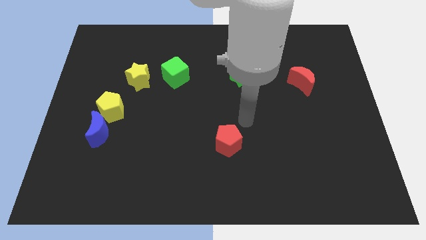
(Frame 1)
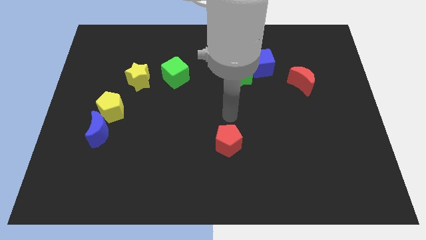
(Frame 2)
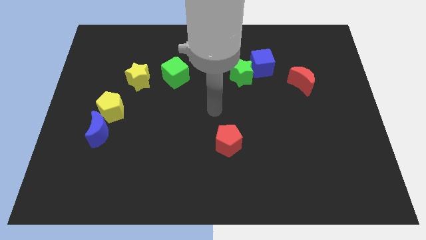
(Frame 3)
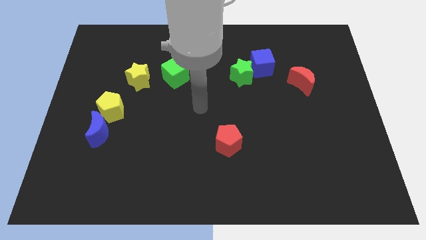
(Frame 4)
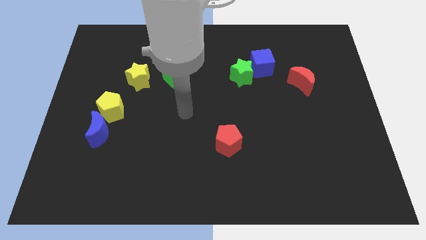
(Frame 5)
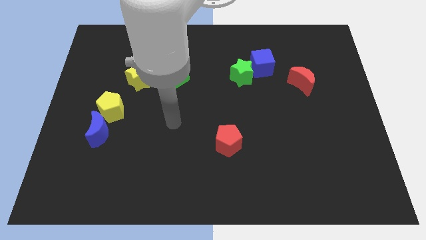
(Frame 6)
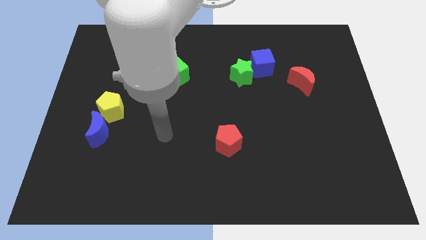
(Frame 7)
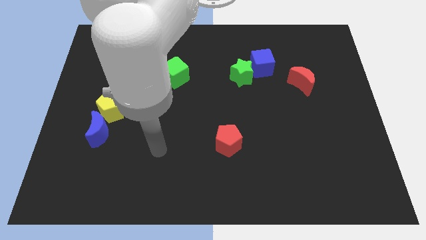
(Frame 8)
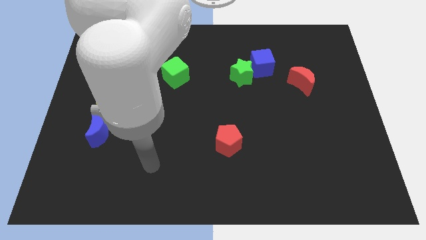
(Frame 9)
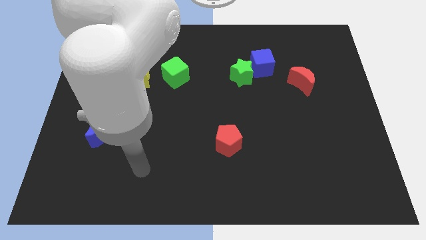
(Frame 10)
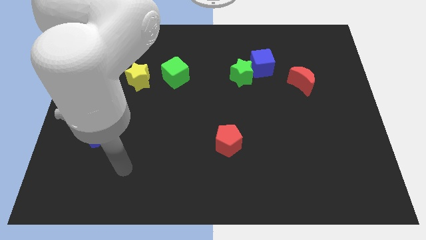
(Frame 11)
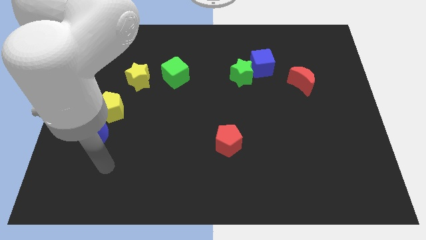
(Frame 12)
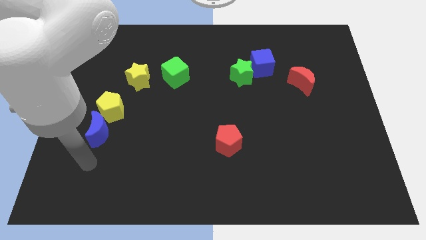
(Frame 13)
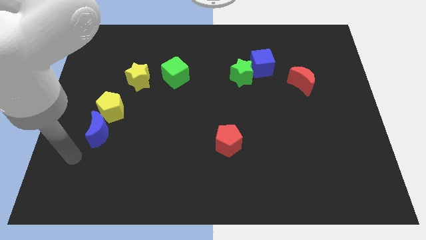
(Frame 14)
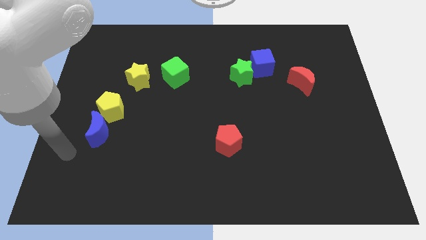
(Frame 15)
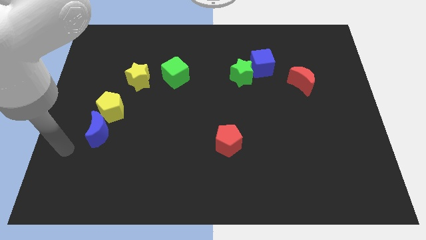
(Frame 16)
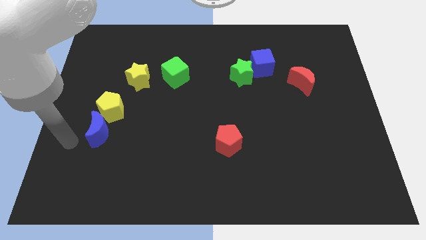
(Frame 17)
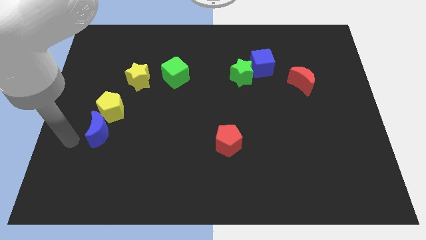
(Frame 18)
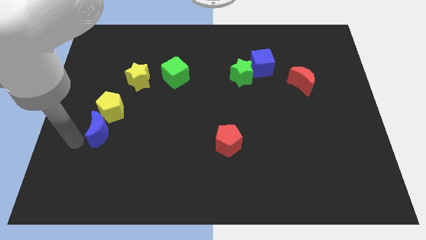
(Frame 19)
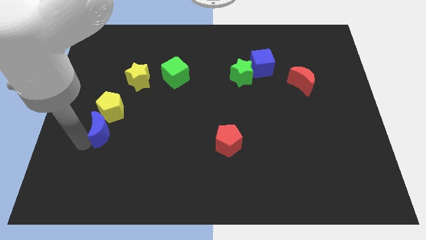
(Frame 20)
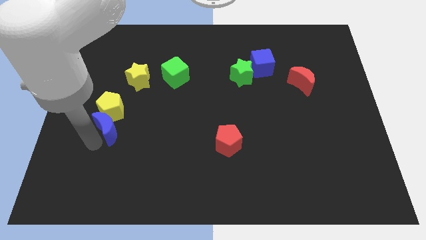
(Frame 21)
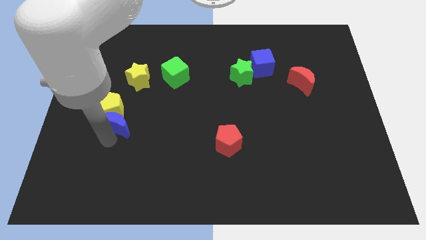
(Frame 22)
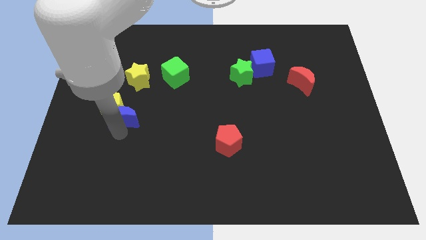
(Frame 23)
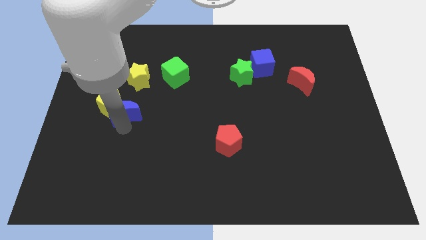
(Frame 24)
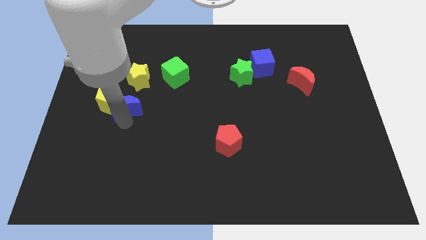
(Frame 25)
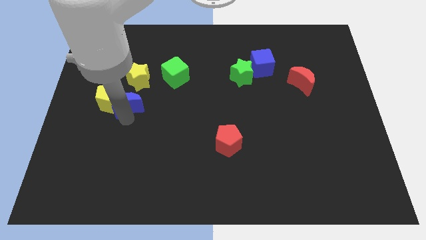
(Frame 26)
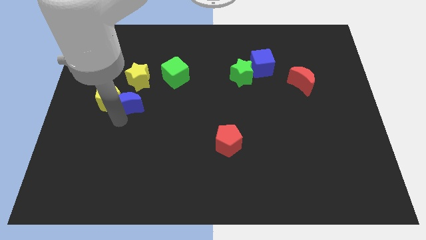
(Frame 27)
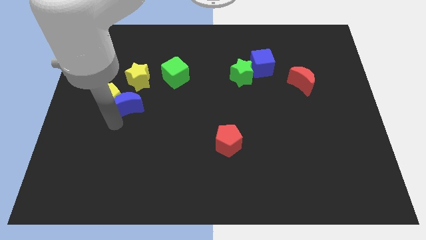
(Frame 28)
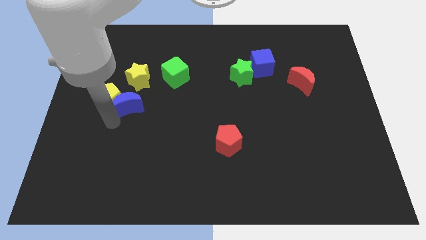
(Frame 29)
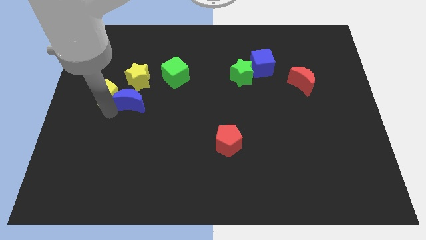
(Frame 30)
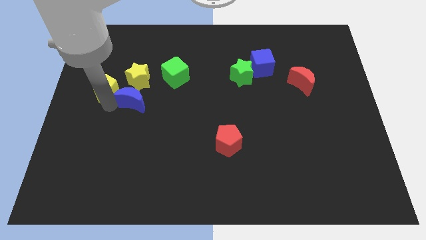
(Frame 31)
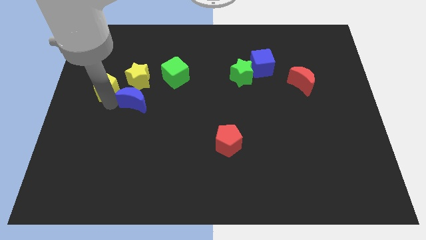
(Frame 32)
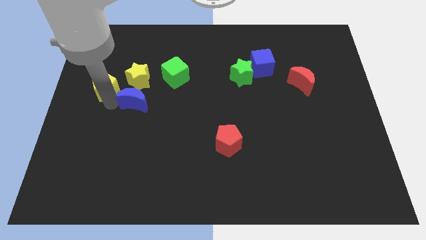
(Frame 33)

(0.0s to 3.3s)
place the blue moon parallel right to the yellow pentagon

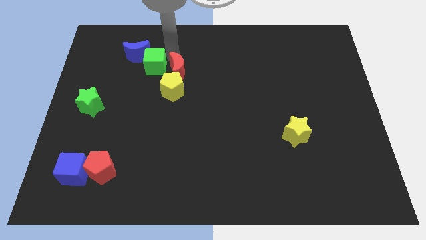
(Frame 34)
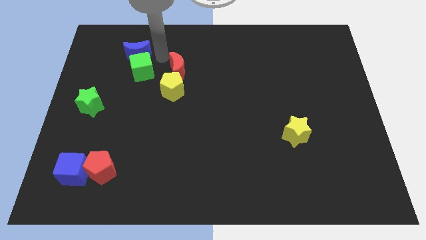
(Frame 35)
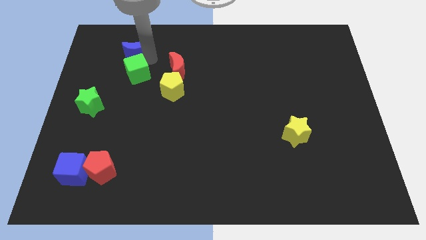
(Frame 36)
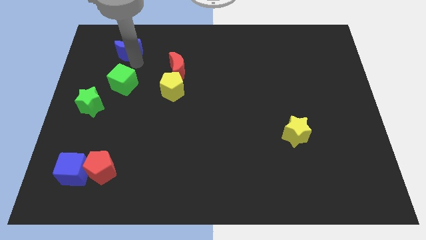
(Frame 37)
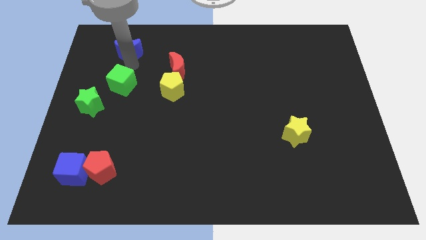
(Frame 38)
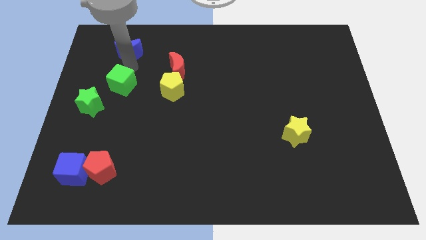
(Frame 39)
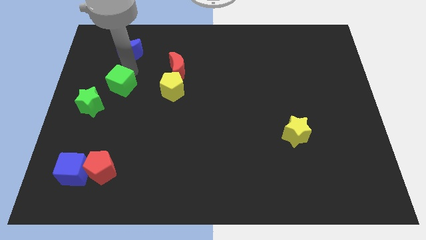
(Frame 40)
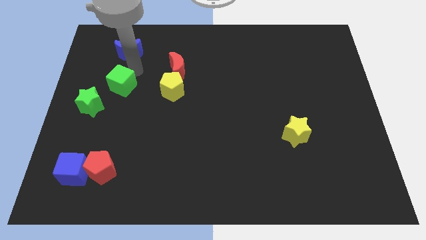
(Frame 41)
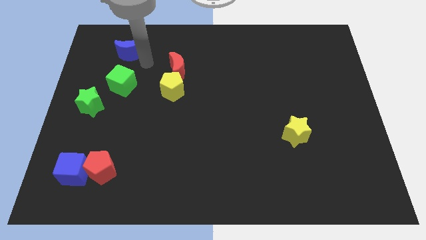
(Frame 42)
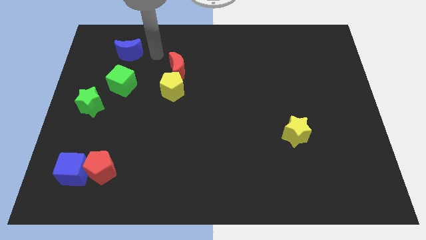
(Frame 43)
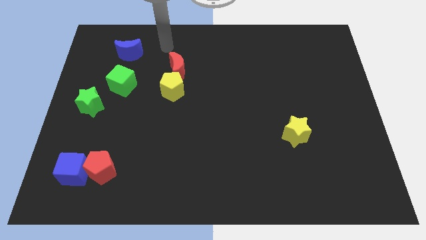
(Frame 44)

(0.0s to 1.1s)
separate the green cube from the blue crescent

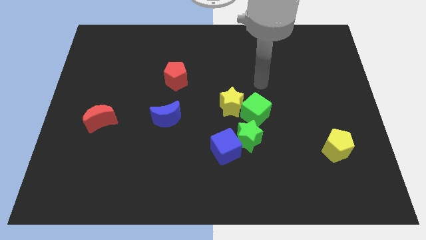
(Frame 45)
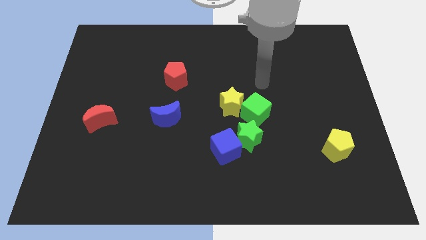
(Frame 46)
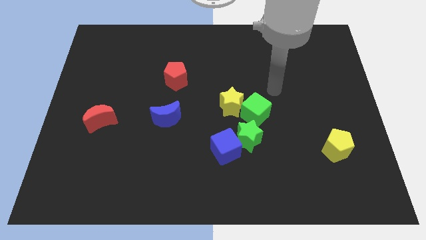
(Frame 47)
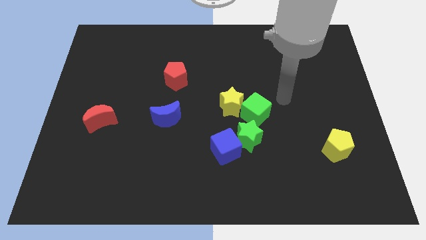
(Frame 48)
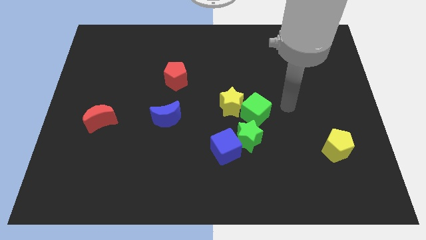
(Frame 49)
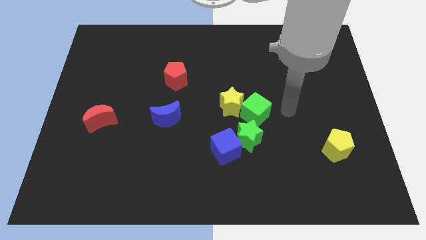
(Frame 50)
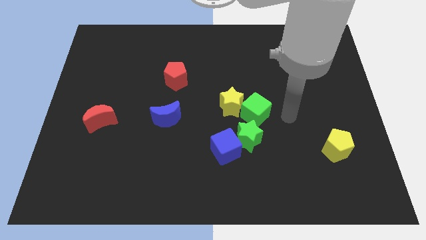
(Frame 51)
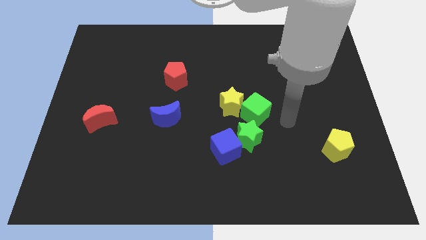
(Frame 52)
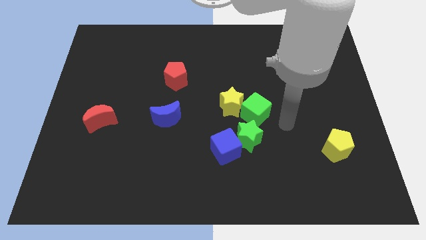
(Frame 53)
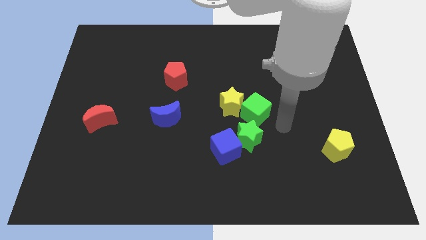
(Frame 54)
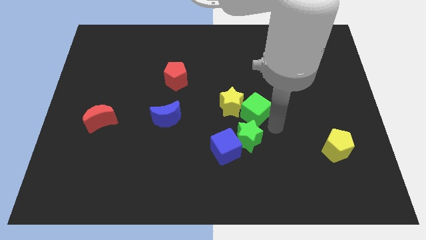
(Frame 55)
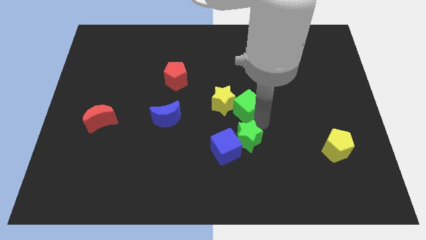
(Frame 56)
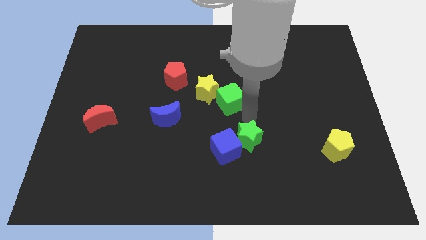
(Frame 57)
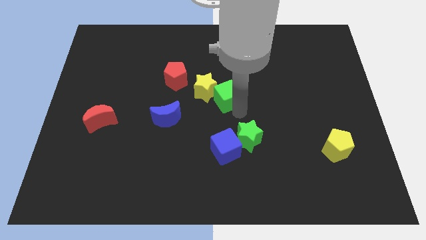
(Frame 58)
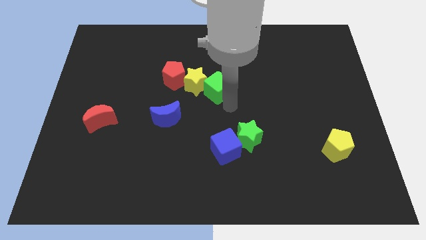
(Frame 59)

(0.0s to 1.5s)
push the yellow star with the green cube

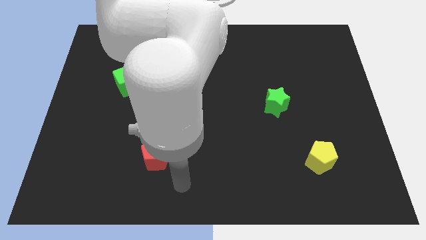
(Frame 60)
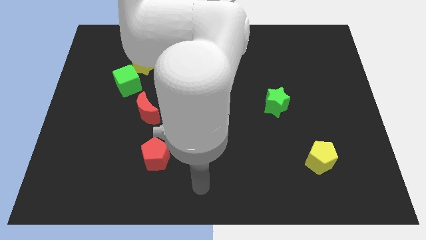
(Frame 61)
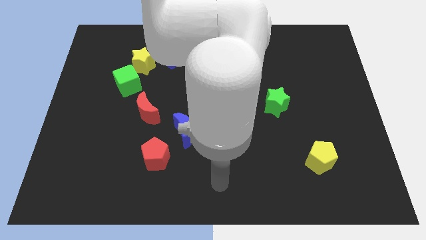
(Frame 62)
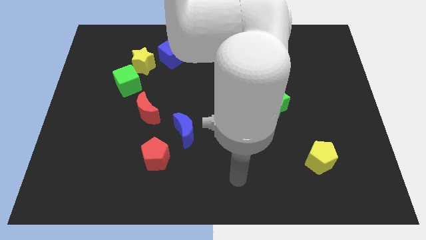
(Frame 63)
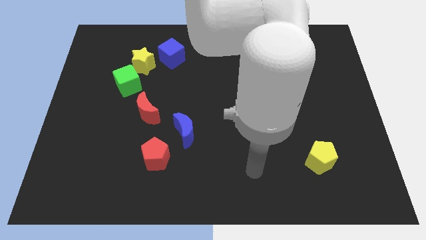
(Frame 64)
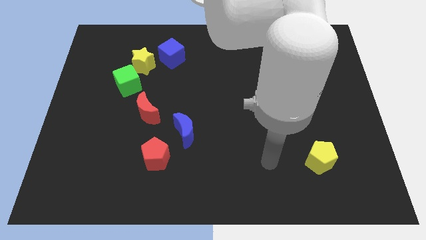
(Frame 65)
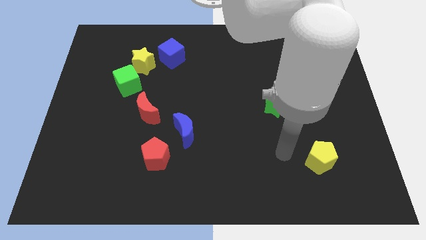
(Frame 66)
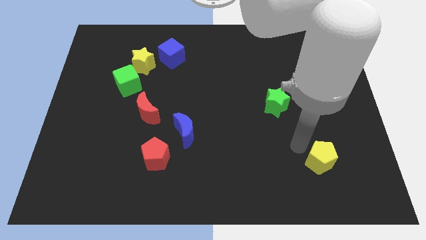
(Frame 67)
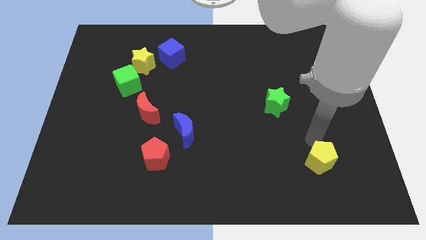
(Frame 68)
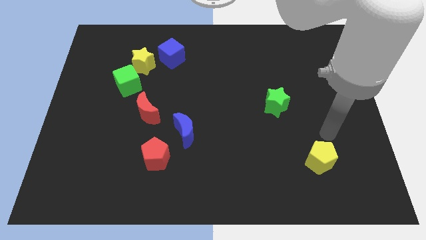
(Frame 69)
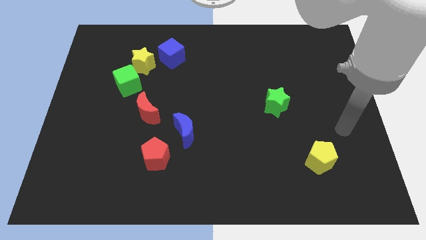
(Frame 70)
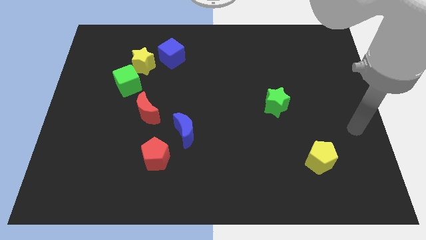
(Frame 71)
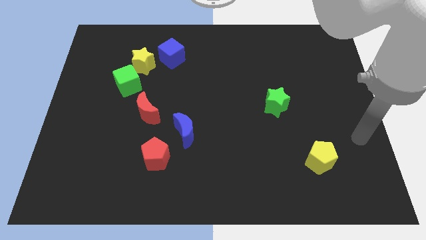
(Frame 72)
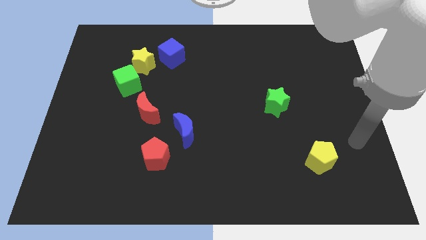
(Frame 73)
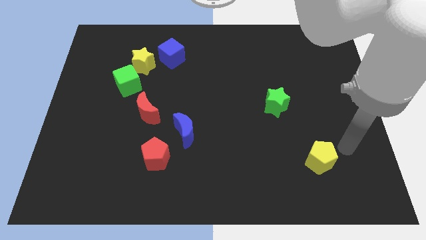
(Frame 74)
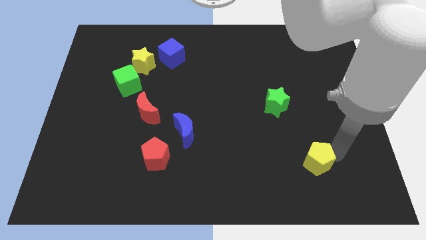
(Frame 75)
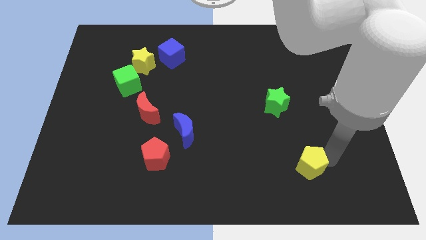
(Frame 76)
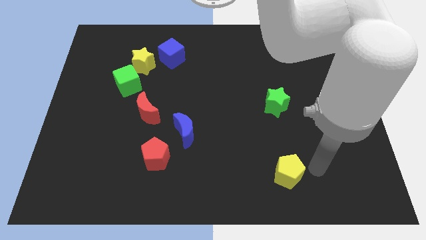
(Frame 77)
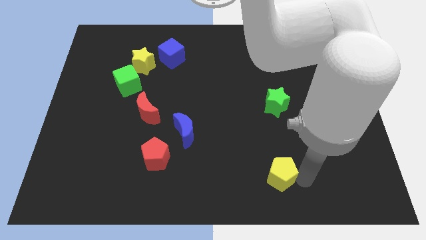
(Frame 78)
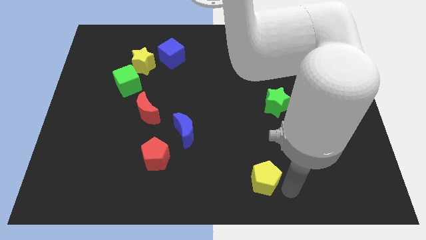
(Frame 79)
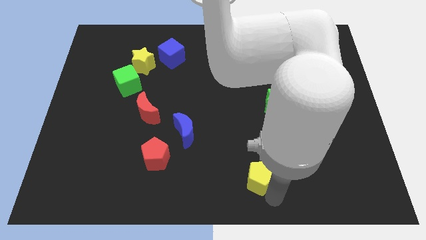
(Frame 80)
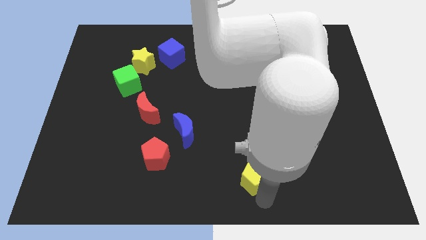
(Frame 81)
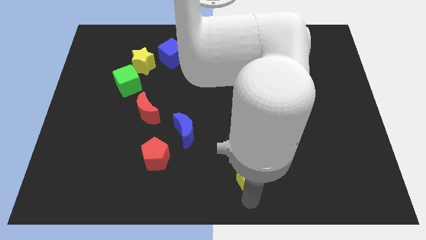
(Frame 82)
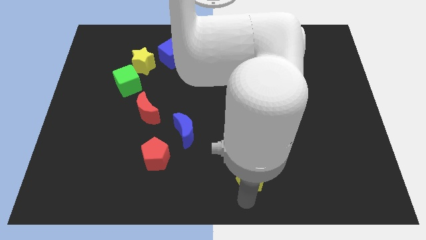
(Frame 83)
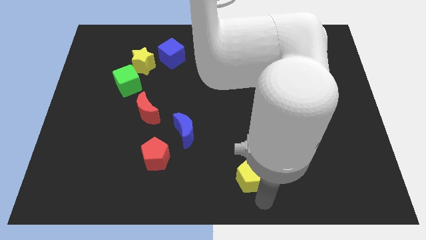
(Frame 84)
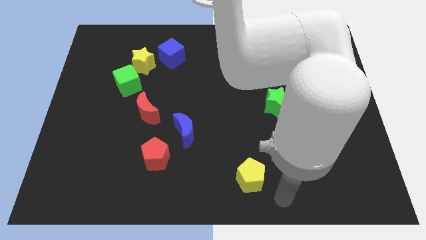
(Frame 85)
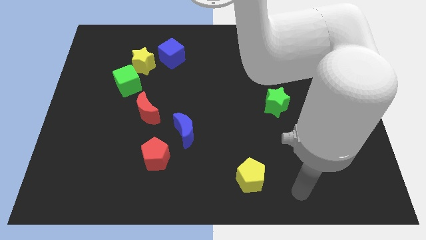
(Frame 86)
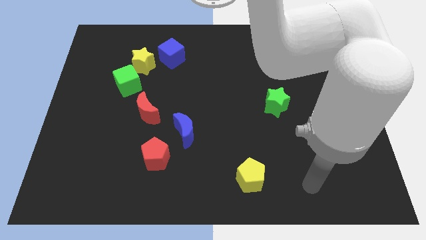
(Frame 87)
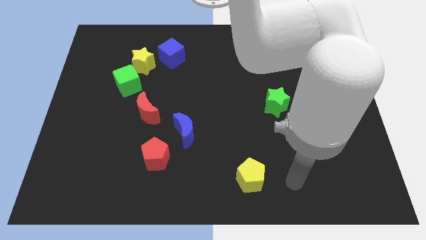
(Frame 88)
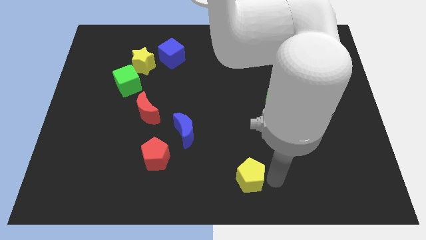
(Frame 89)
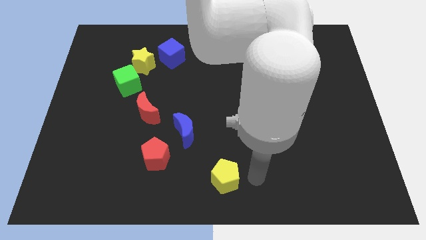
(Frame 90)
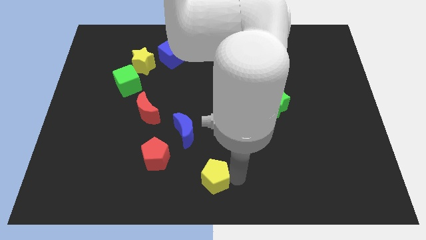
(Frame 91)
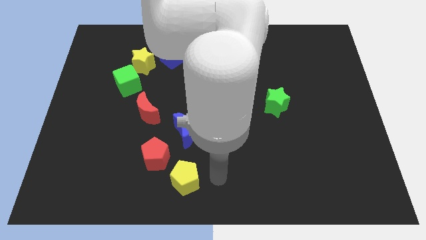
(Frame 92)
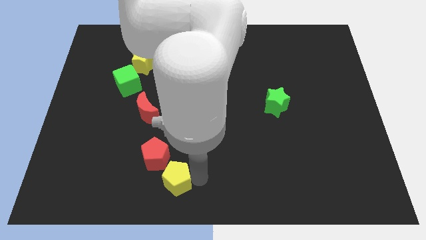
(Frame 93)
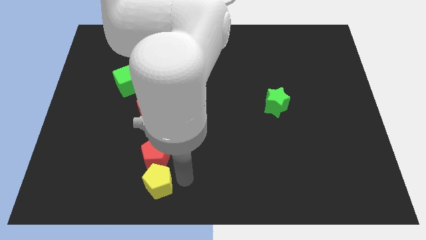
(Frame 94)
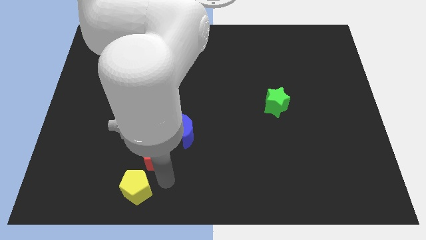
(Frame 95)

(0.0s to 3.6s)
push the yellow pentagon to the bottom of the red pentagon
